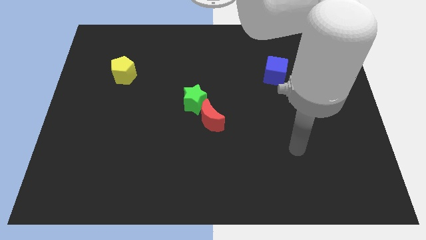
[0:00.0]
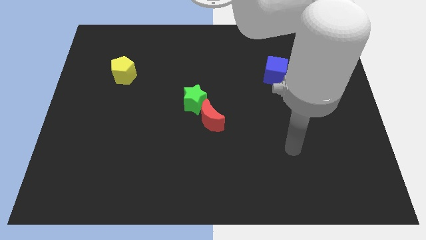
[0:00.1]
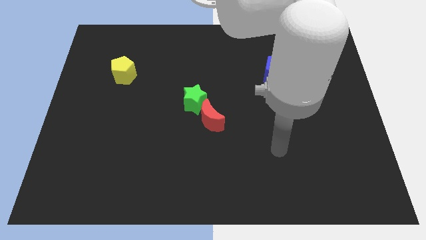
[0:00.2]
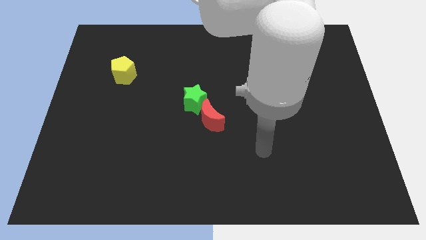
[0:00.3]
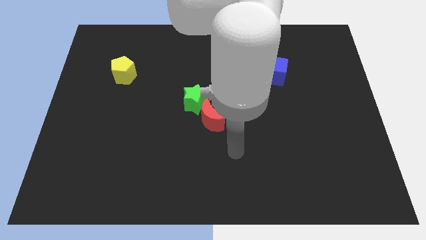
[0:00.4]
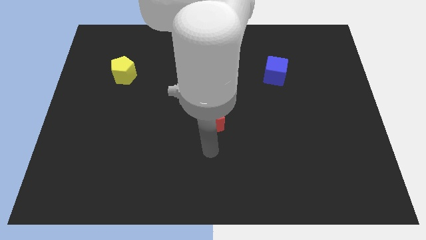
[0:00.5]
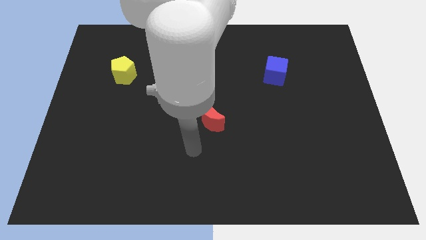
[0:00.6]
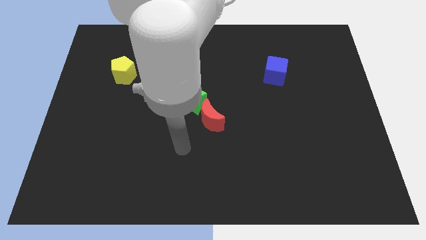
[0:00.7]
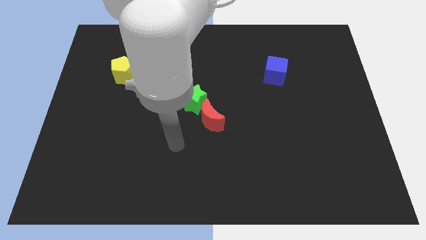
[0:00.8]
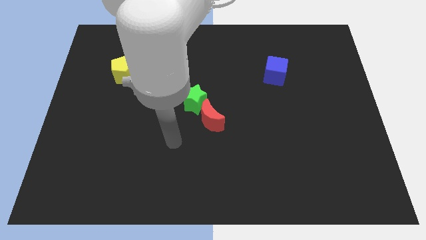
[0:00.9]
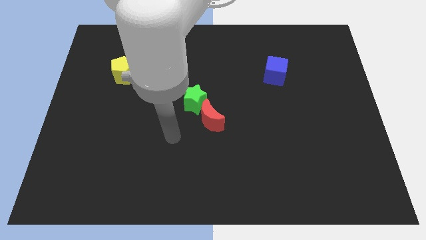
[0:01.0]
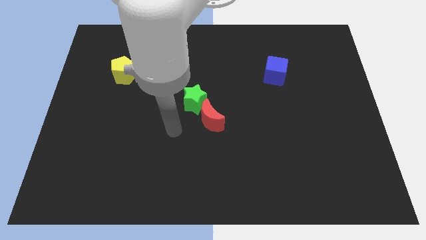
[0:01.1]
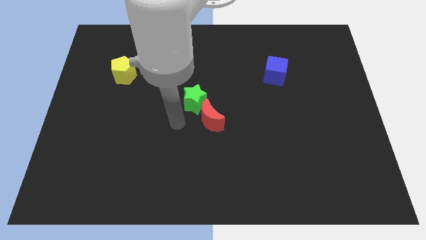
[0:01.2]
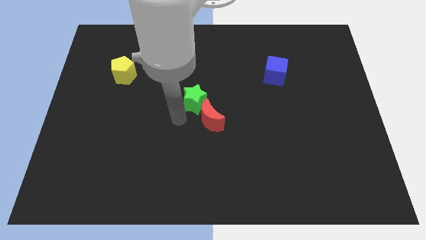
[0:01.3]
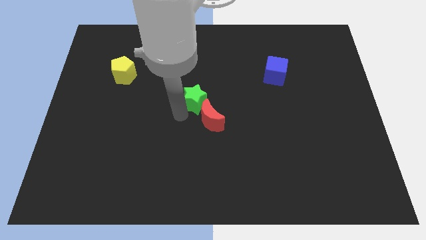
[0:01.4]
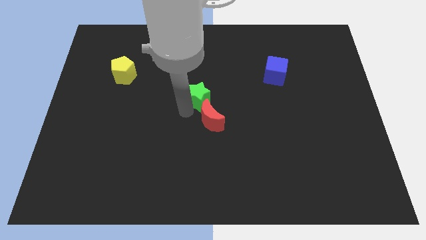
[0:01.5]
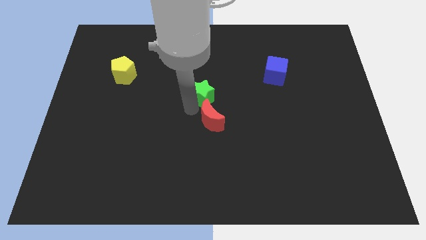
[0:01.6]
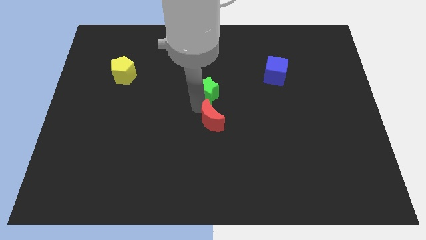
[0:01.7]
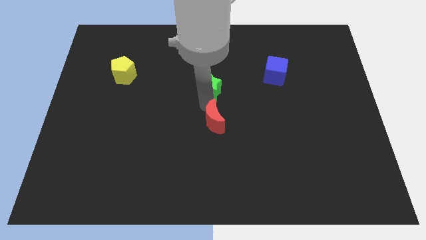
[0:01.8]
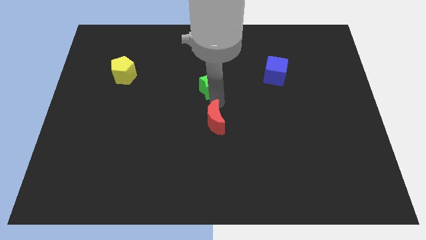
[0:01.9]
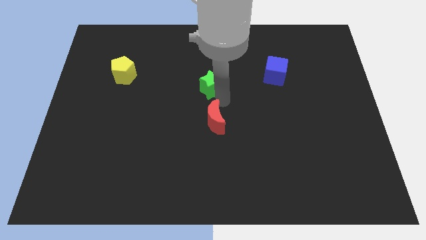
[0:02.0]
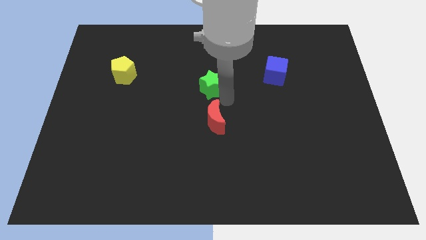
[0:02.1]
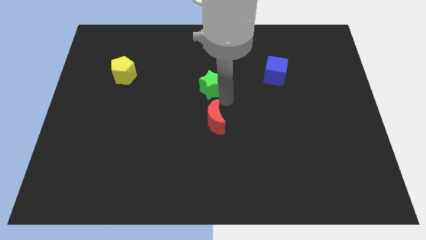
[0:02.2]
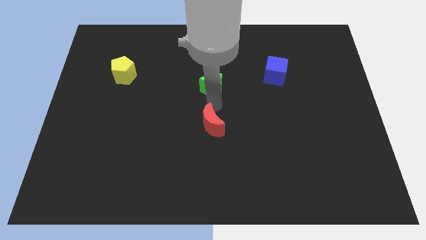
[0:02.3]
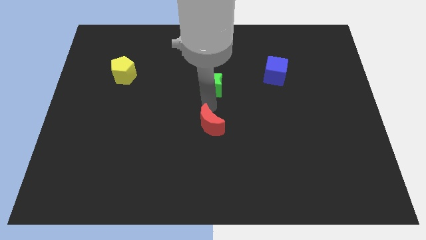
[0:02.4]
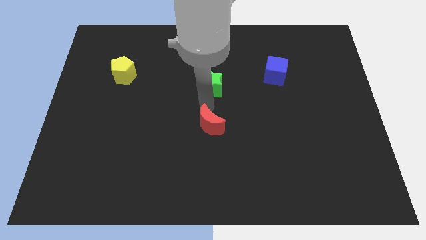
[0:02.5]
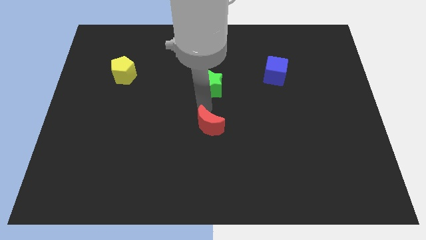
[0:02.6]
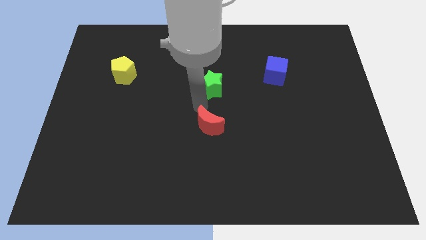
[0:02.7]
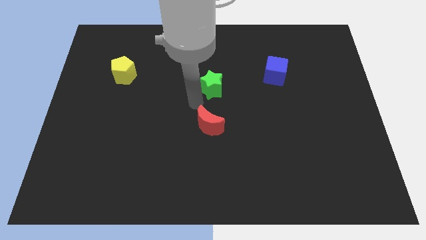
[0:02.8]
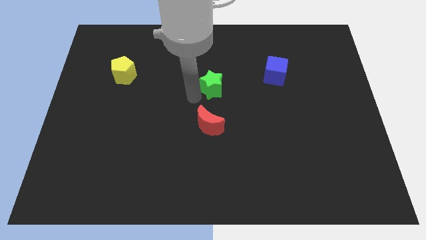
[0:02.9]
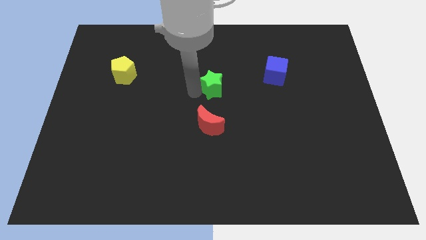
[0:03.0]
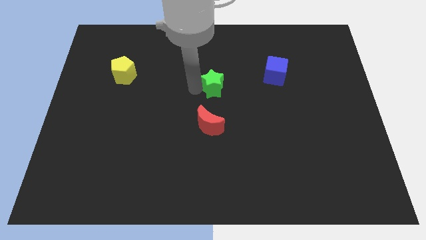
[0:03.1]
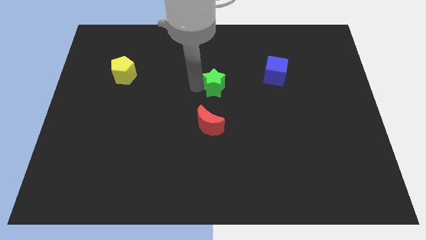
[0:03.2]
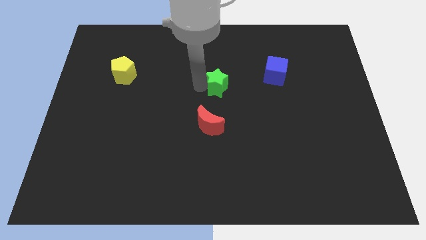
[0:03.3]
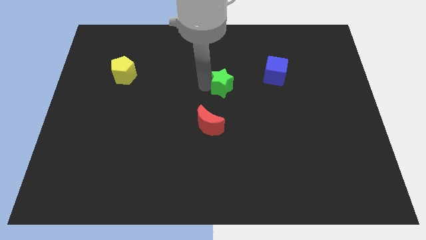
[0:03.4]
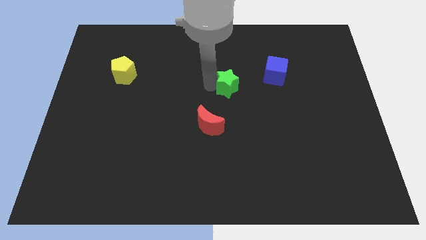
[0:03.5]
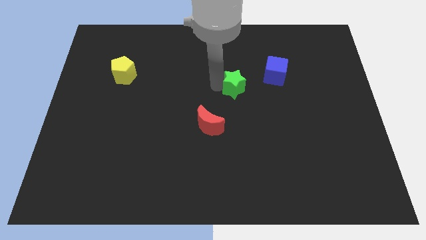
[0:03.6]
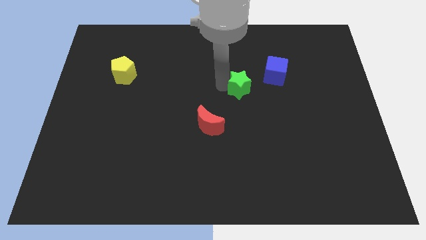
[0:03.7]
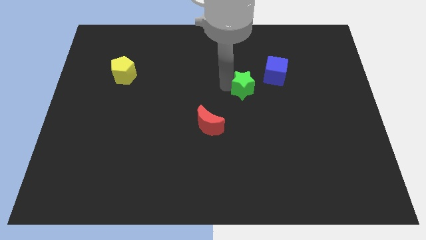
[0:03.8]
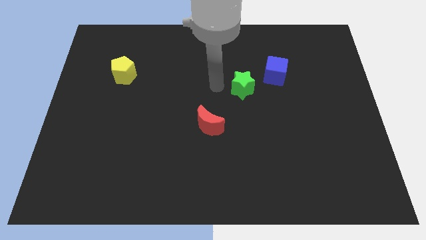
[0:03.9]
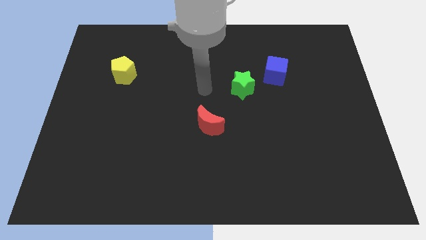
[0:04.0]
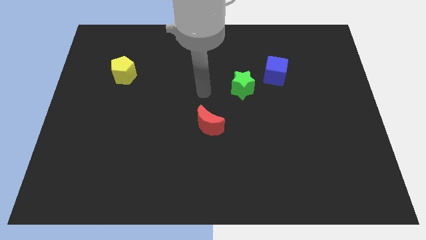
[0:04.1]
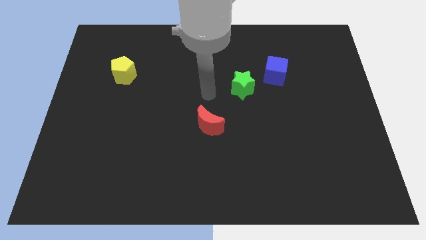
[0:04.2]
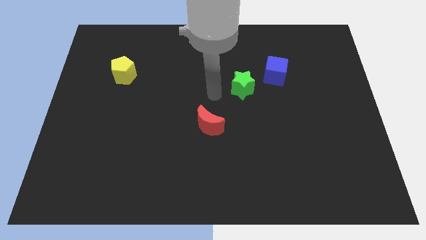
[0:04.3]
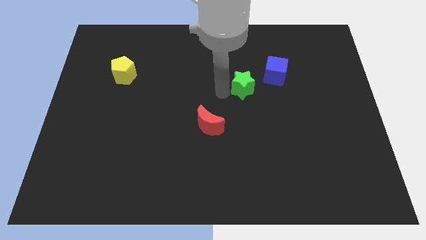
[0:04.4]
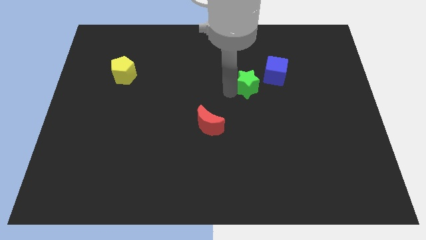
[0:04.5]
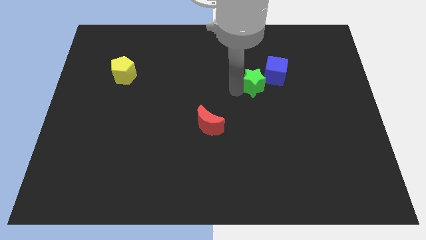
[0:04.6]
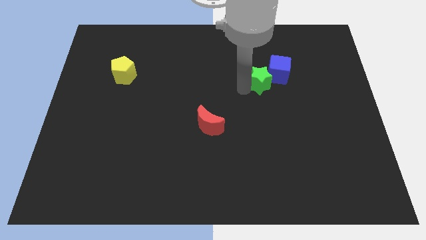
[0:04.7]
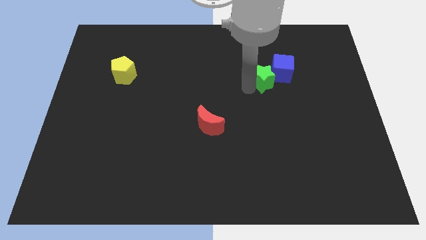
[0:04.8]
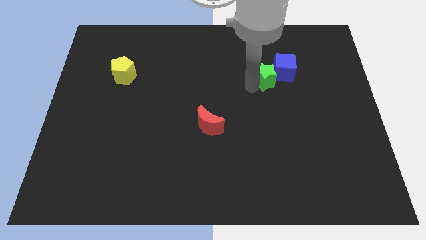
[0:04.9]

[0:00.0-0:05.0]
push the green star next to the blue block

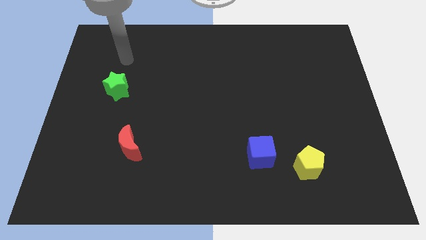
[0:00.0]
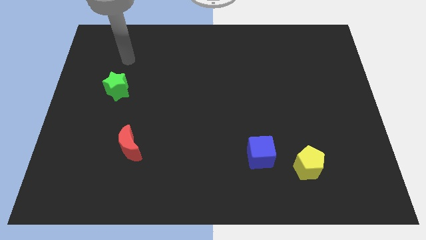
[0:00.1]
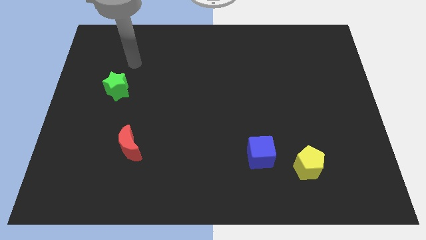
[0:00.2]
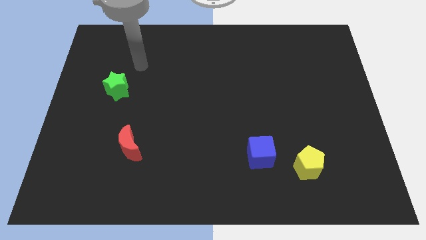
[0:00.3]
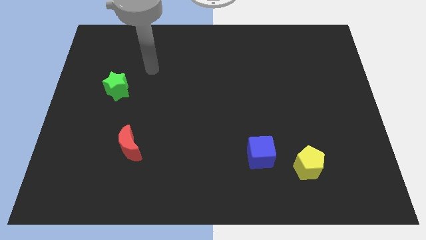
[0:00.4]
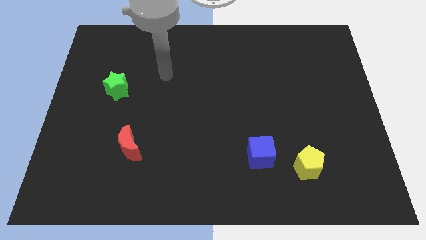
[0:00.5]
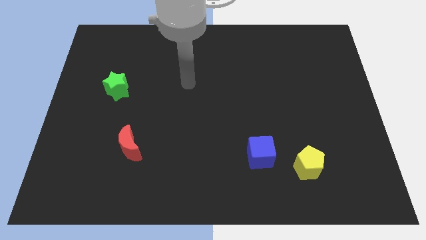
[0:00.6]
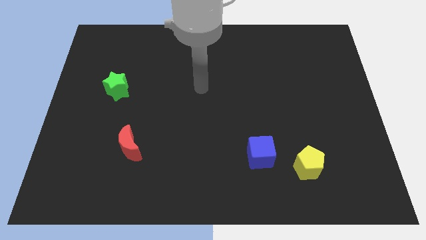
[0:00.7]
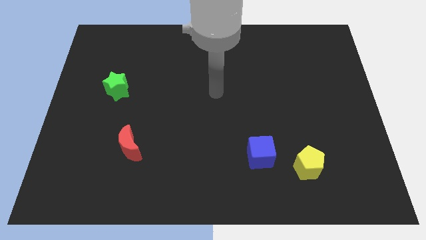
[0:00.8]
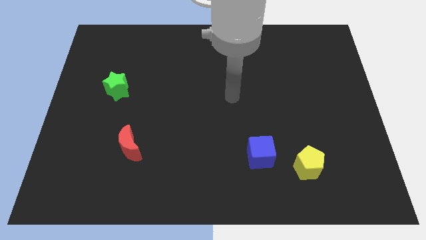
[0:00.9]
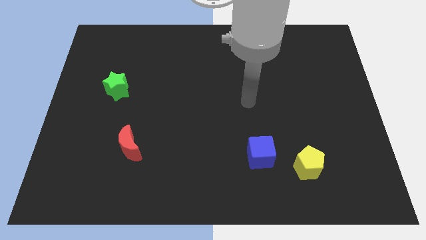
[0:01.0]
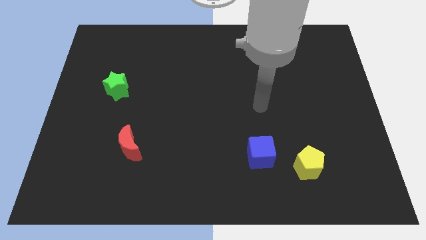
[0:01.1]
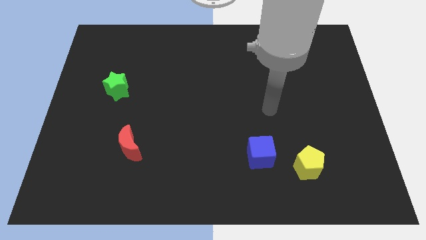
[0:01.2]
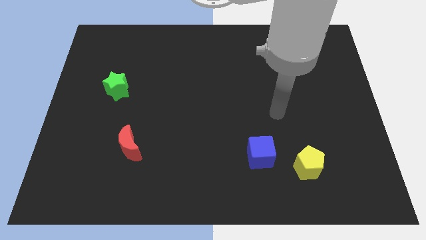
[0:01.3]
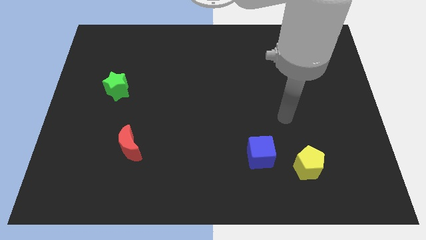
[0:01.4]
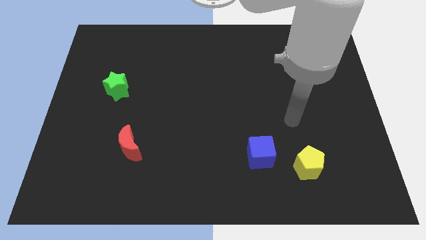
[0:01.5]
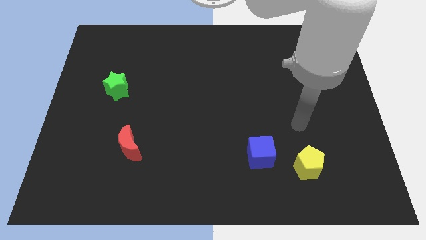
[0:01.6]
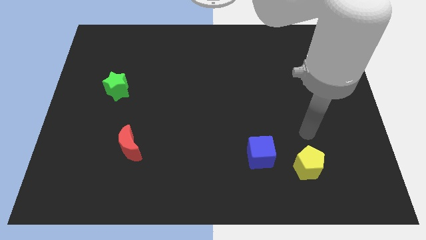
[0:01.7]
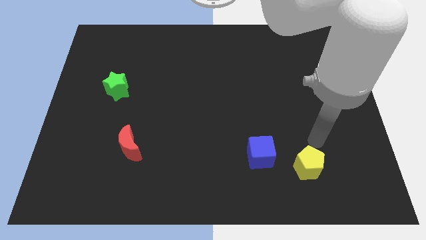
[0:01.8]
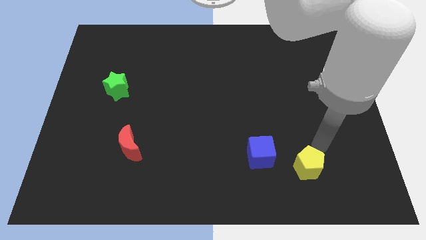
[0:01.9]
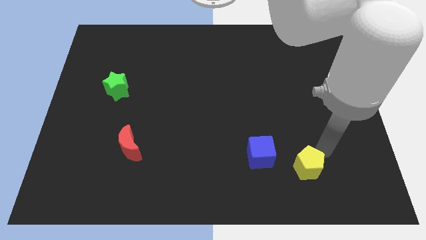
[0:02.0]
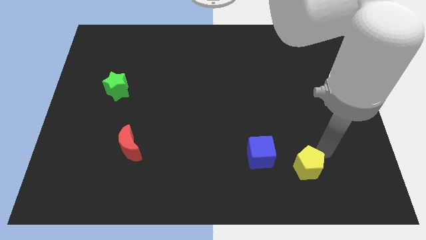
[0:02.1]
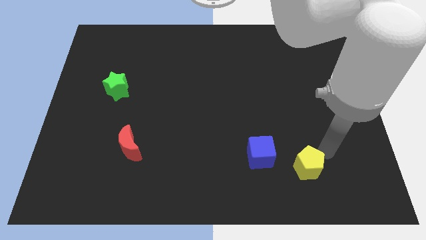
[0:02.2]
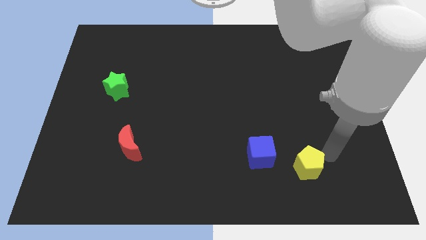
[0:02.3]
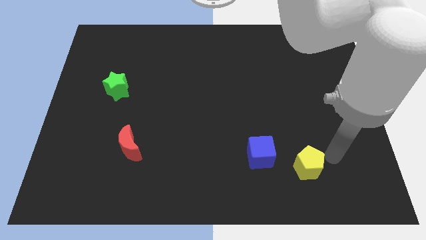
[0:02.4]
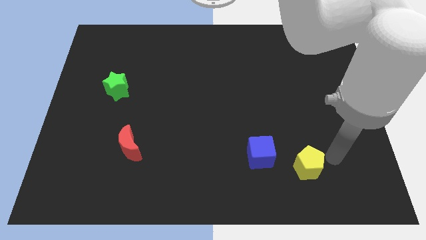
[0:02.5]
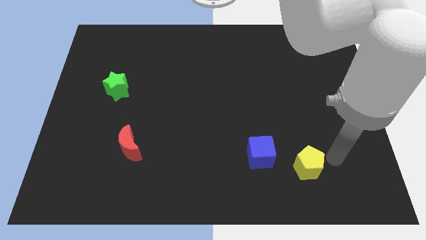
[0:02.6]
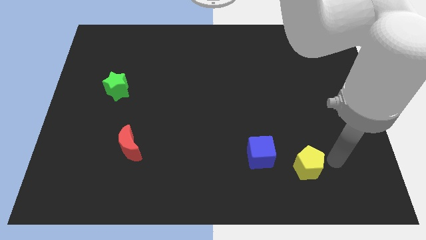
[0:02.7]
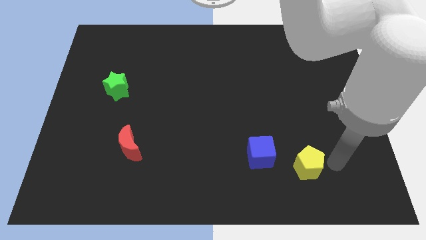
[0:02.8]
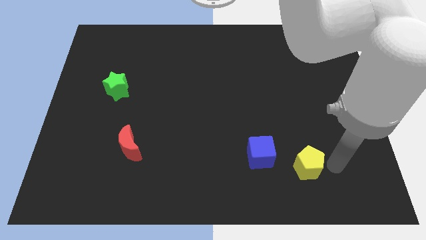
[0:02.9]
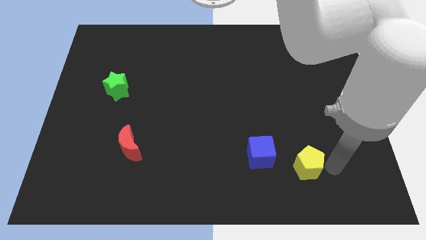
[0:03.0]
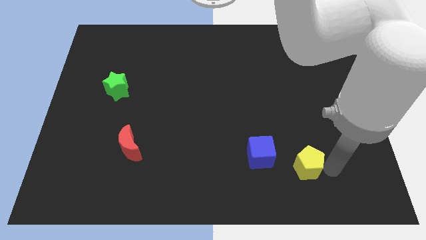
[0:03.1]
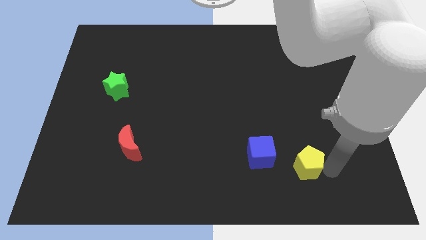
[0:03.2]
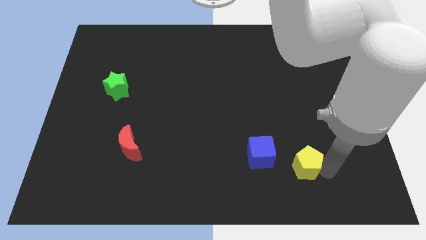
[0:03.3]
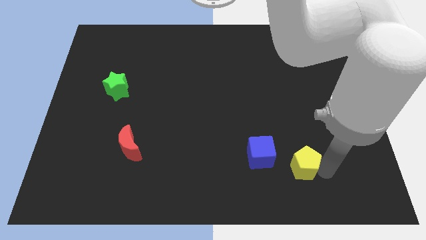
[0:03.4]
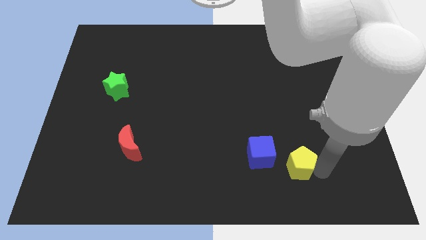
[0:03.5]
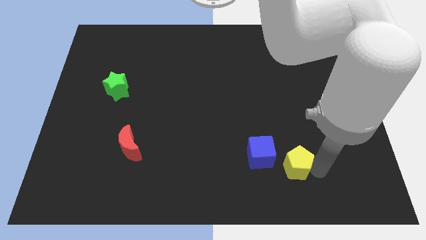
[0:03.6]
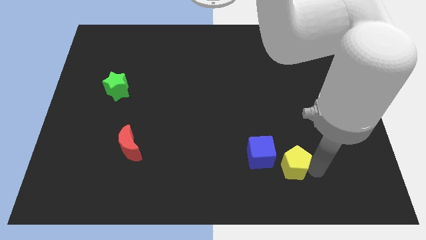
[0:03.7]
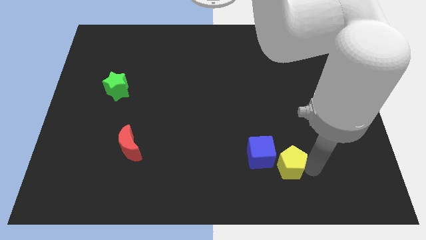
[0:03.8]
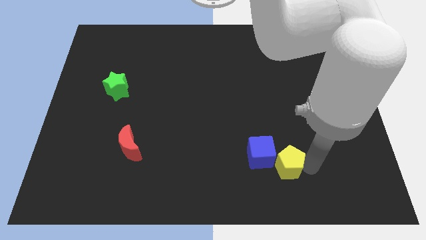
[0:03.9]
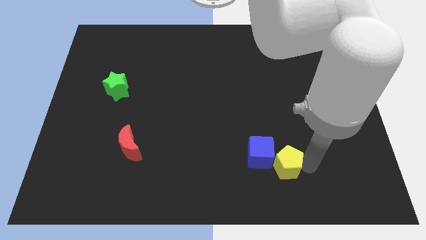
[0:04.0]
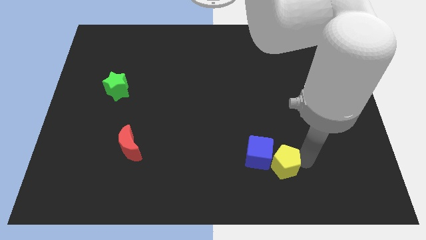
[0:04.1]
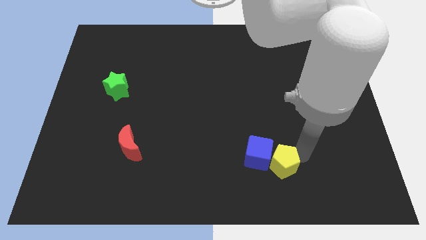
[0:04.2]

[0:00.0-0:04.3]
move the yellow pentagon to the blue cube
